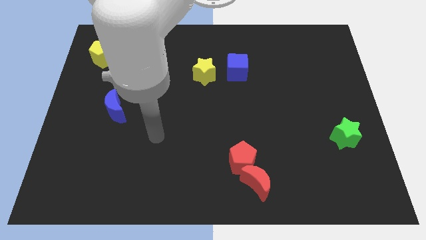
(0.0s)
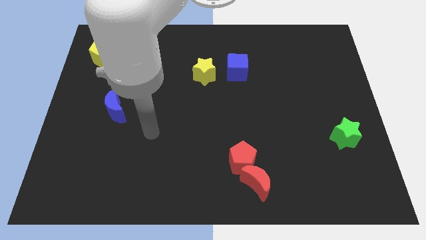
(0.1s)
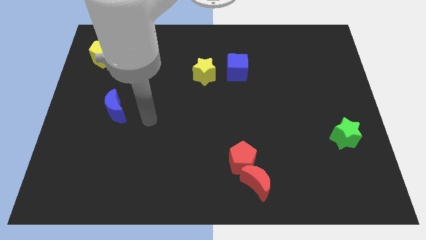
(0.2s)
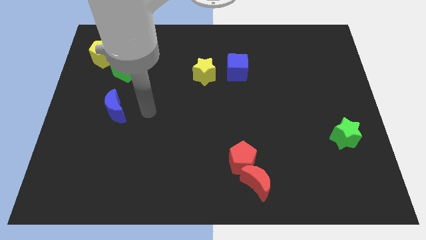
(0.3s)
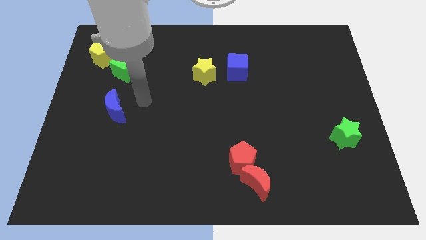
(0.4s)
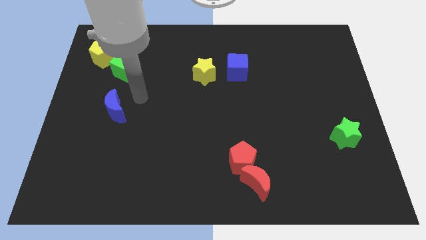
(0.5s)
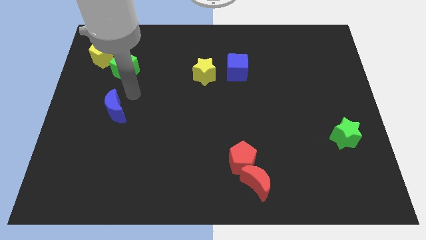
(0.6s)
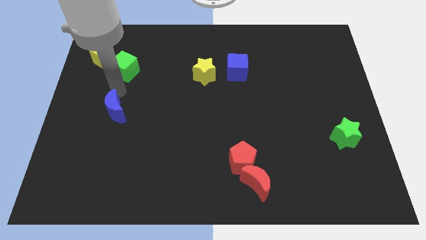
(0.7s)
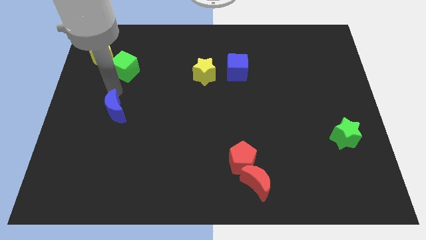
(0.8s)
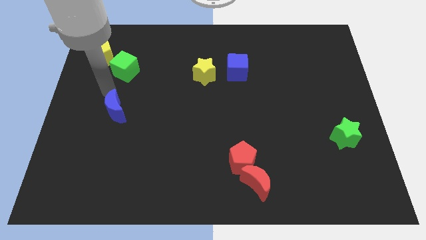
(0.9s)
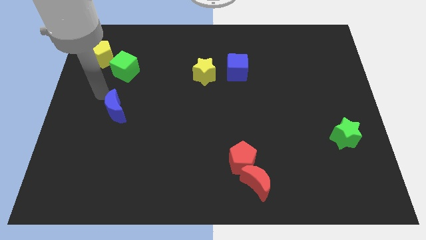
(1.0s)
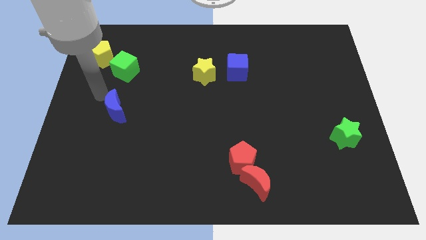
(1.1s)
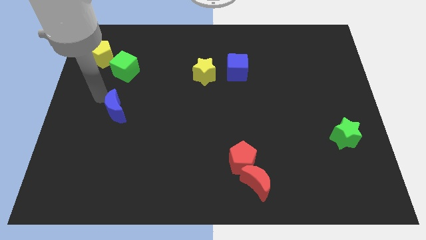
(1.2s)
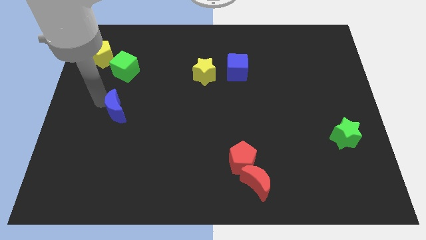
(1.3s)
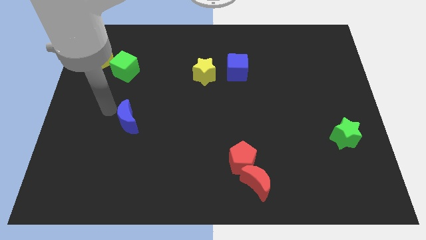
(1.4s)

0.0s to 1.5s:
place your arm to the left of the blue moon

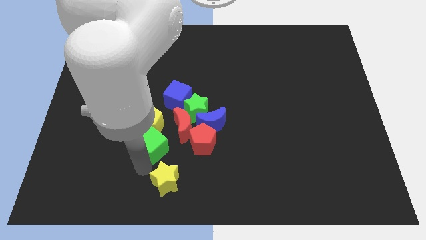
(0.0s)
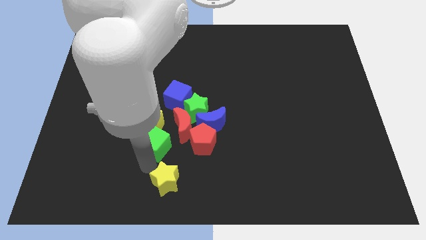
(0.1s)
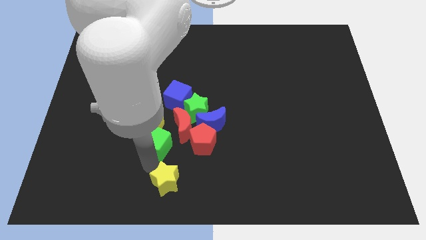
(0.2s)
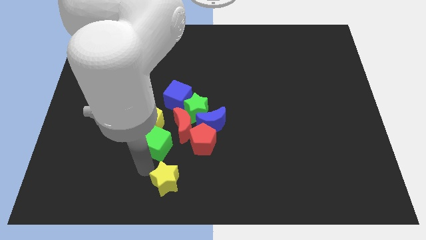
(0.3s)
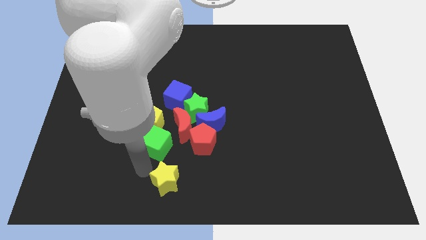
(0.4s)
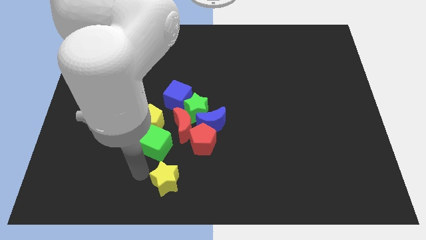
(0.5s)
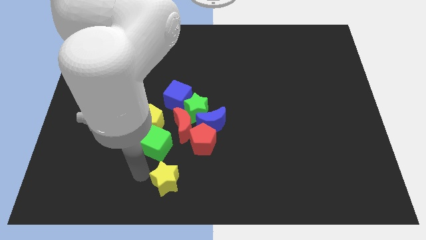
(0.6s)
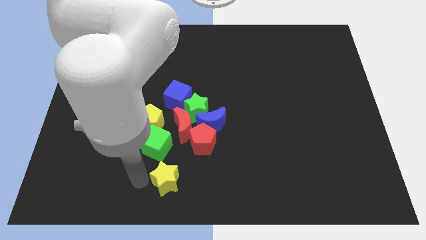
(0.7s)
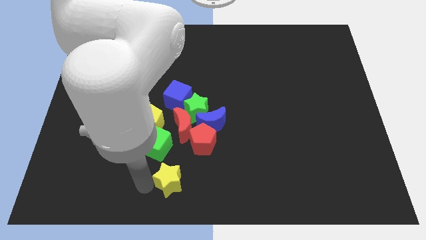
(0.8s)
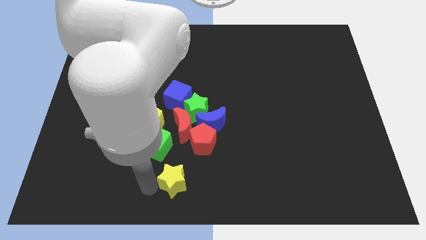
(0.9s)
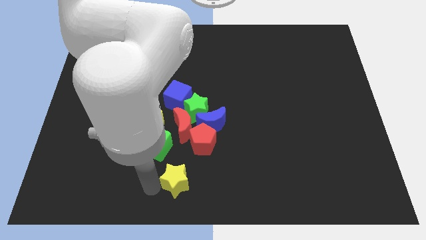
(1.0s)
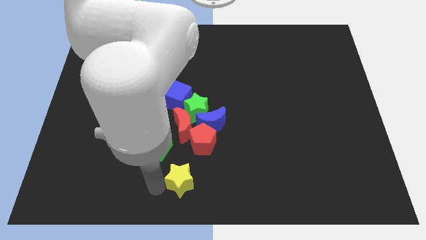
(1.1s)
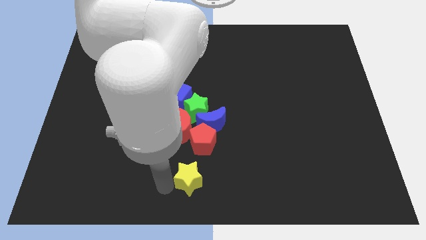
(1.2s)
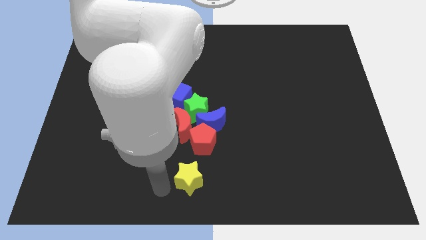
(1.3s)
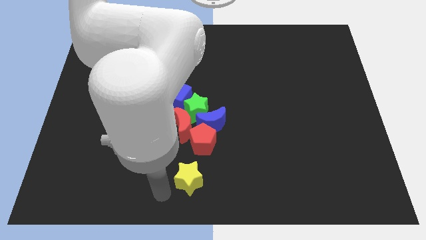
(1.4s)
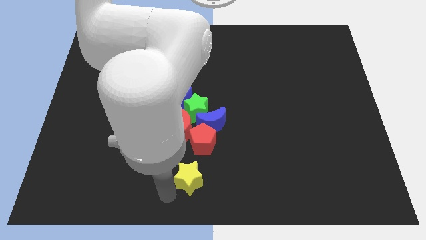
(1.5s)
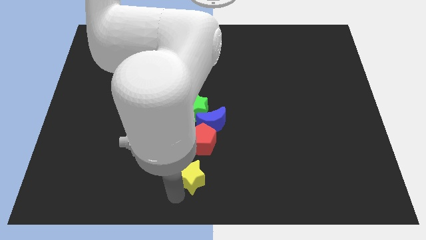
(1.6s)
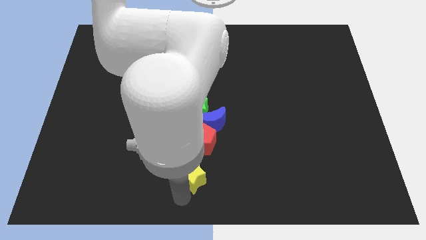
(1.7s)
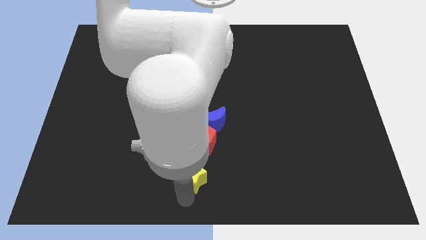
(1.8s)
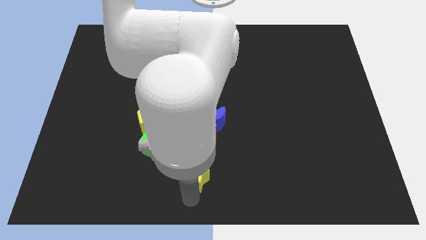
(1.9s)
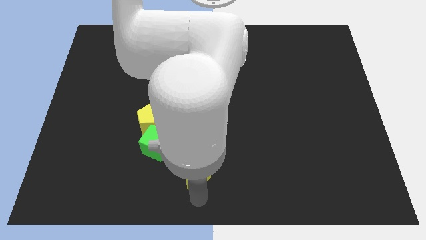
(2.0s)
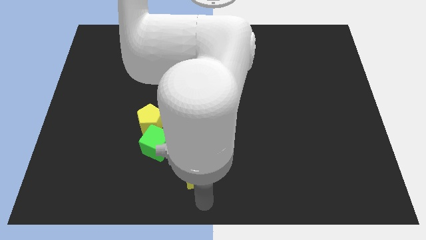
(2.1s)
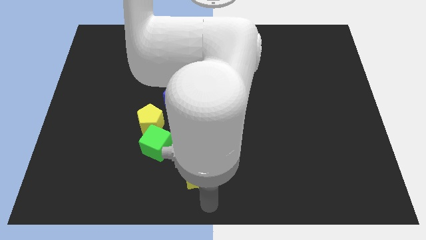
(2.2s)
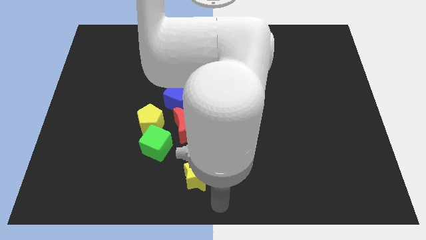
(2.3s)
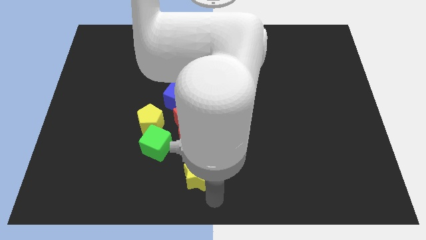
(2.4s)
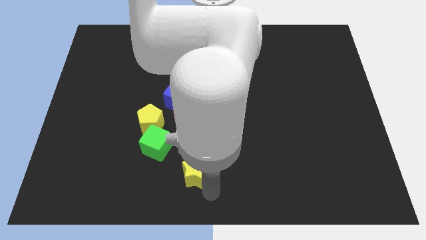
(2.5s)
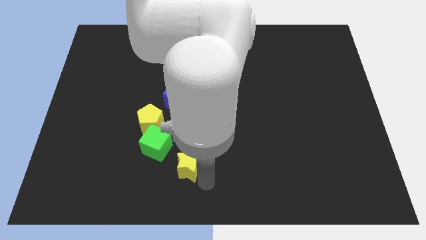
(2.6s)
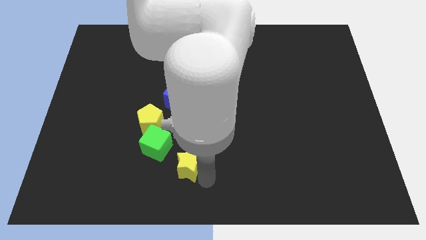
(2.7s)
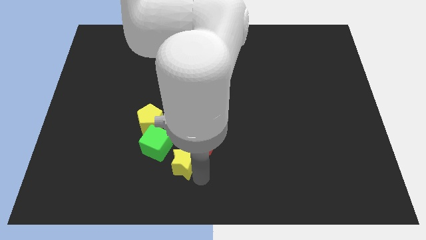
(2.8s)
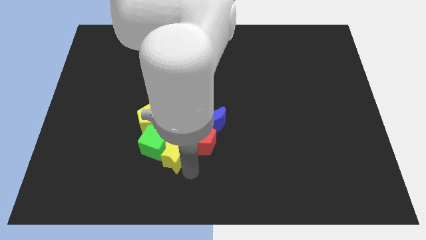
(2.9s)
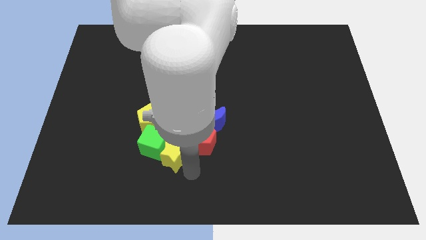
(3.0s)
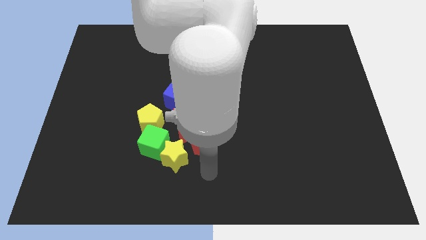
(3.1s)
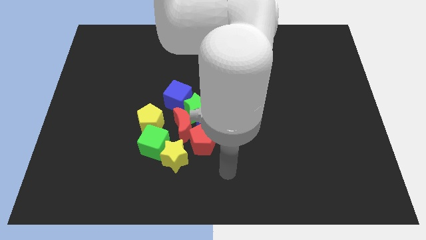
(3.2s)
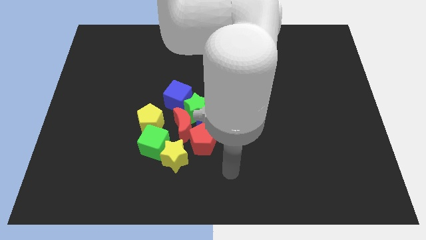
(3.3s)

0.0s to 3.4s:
push the yellow star into the green cube

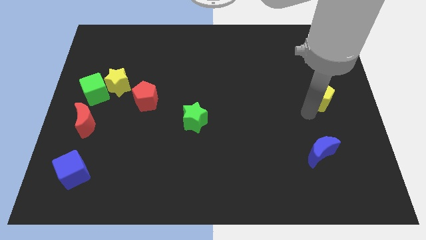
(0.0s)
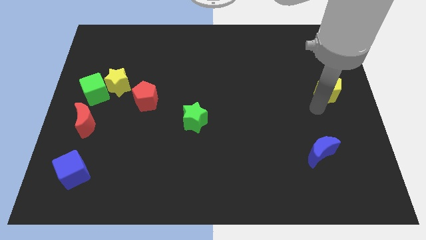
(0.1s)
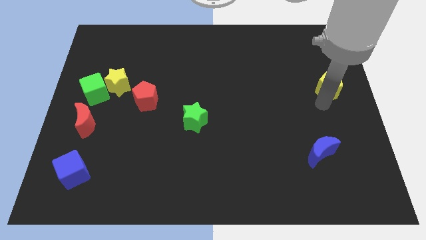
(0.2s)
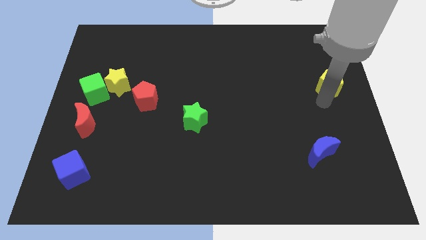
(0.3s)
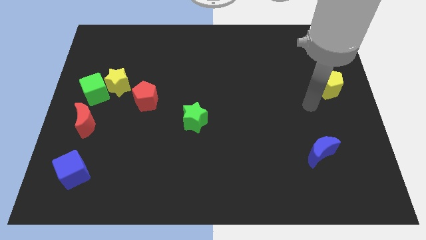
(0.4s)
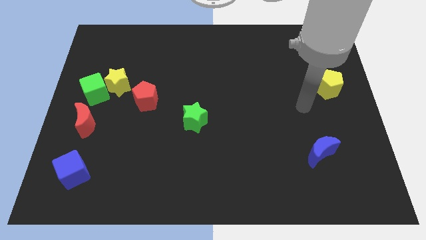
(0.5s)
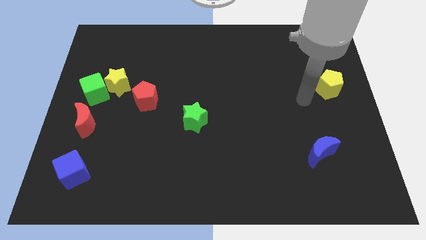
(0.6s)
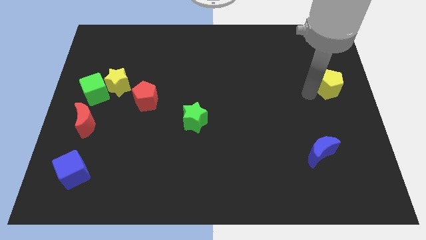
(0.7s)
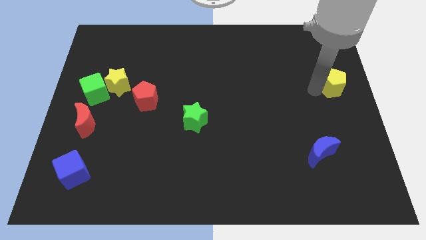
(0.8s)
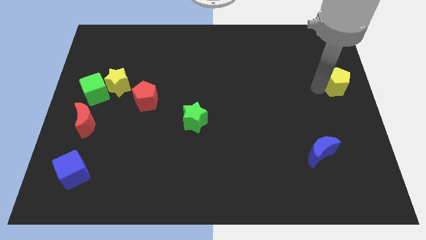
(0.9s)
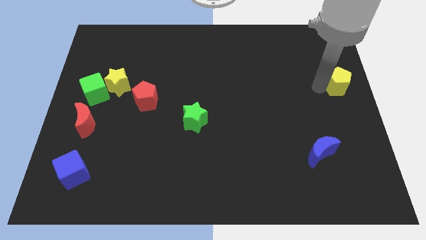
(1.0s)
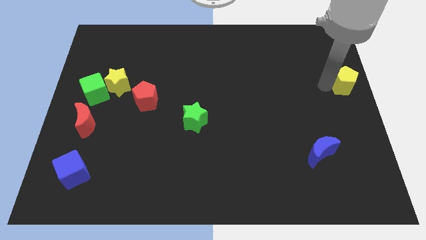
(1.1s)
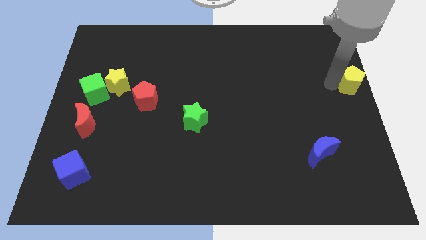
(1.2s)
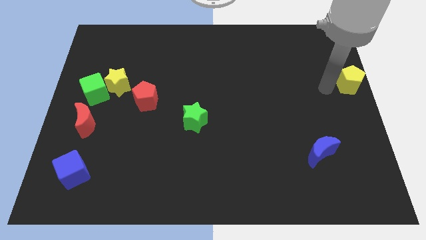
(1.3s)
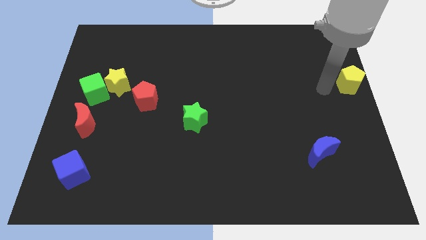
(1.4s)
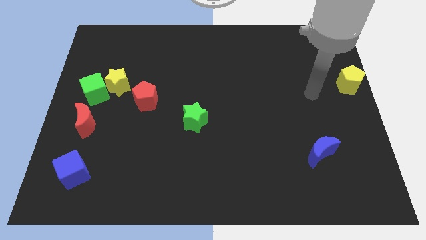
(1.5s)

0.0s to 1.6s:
place the yellow pentagon diagonally top right to the blue moon

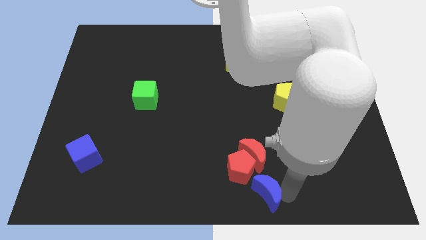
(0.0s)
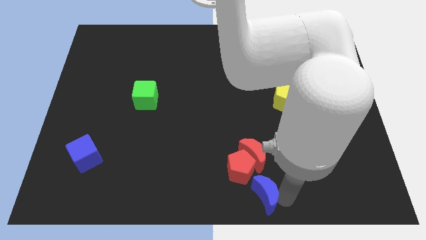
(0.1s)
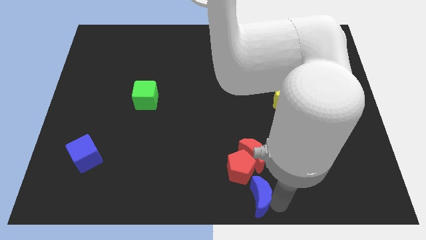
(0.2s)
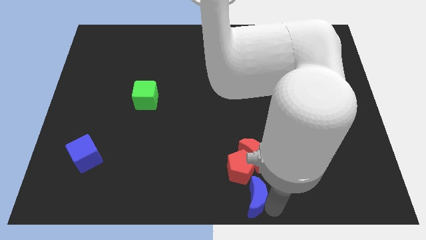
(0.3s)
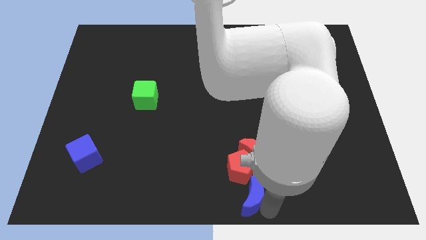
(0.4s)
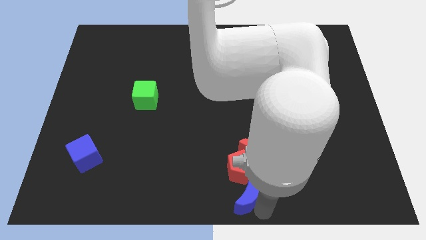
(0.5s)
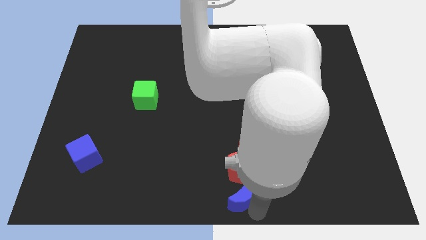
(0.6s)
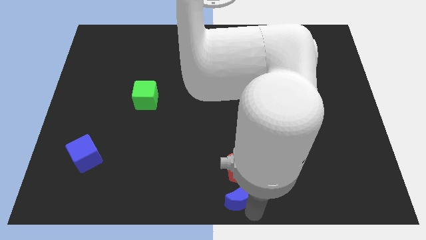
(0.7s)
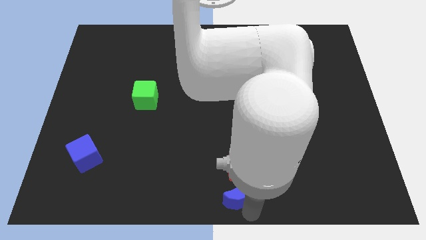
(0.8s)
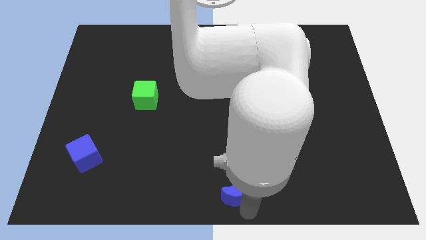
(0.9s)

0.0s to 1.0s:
place the blue crescent below the red pentagon

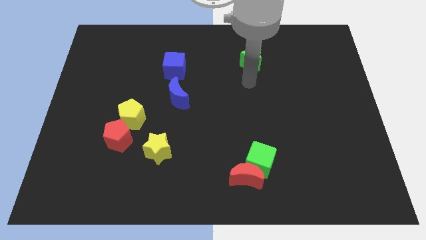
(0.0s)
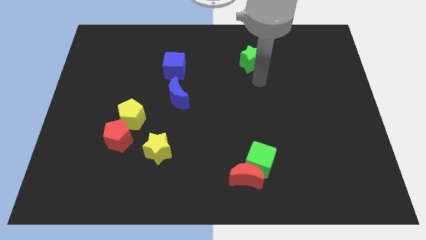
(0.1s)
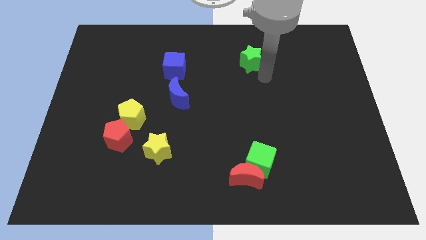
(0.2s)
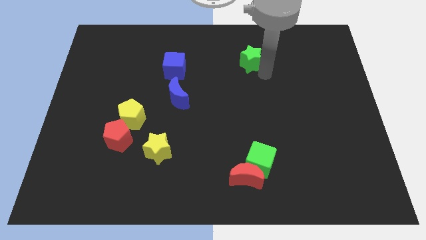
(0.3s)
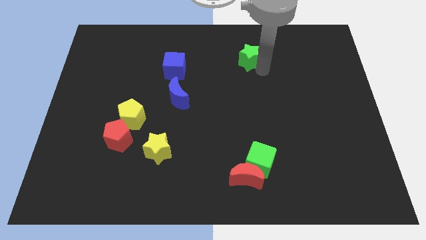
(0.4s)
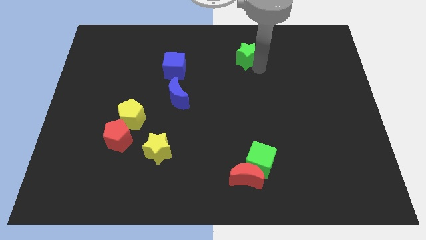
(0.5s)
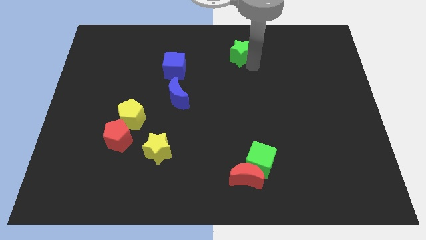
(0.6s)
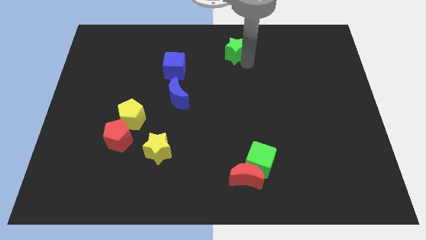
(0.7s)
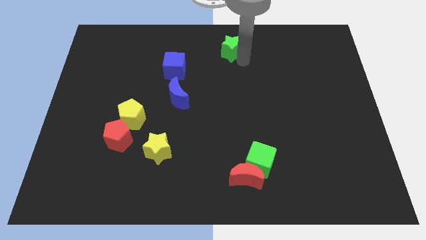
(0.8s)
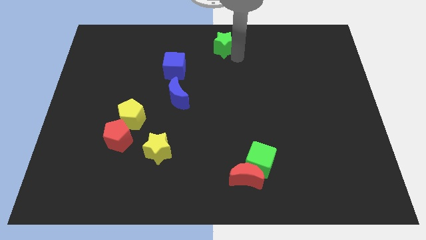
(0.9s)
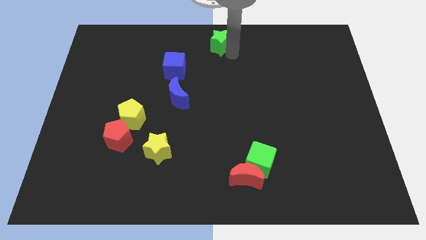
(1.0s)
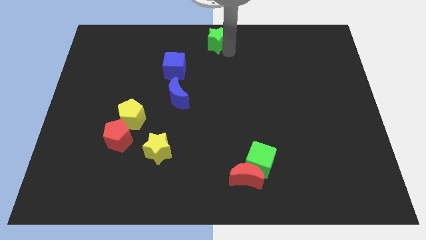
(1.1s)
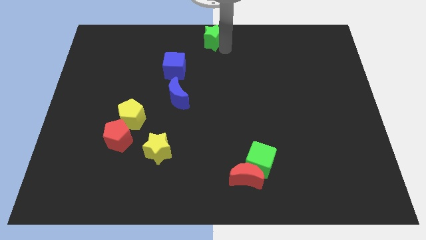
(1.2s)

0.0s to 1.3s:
move the green star to the top center of the board

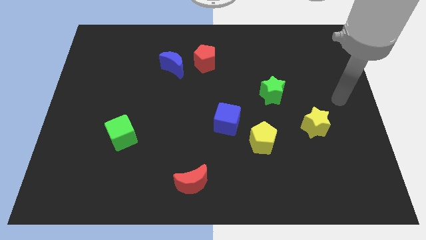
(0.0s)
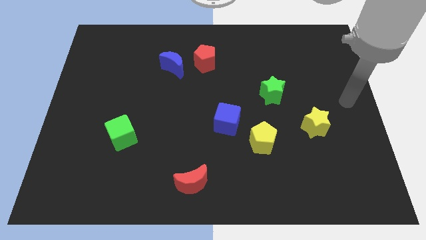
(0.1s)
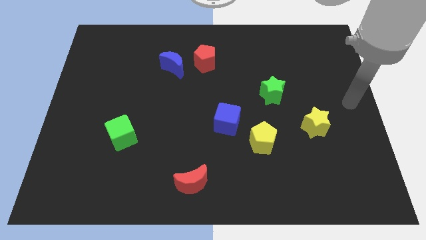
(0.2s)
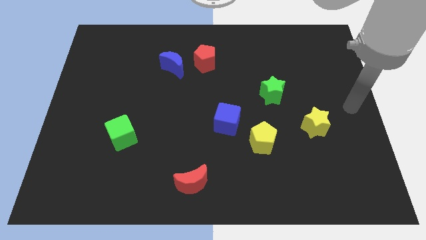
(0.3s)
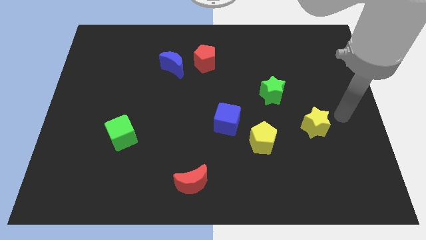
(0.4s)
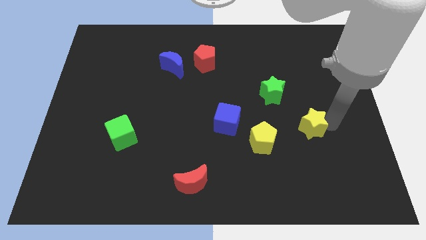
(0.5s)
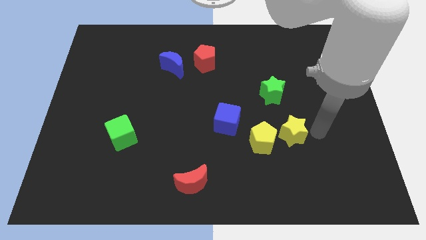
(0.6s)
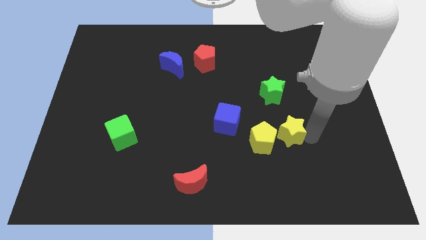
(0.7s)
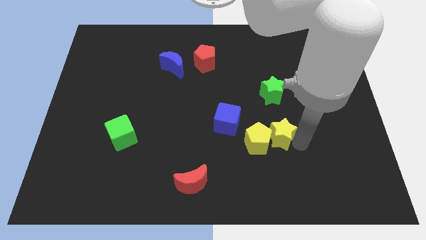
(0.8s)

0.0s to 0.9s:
push the yellow star towards the yellow pentagon
